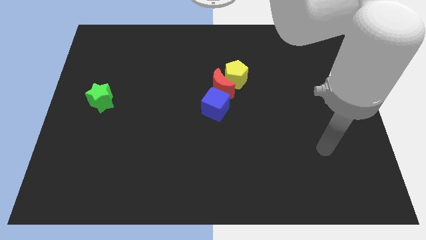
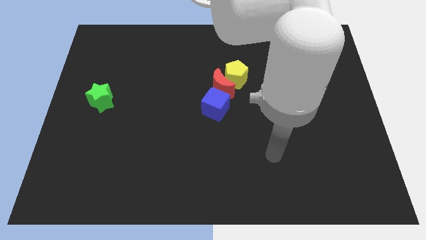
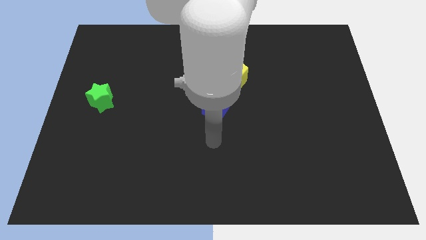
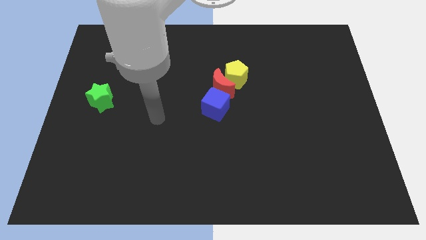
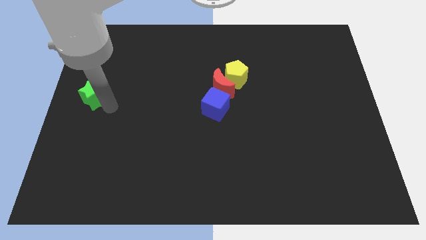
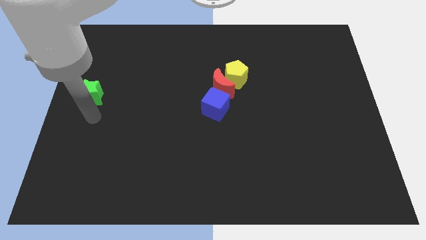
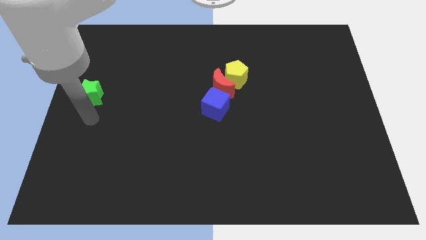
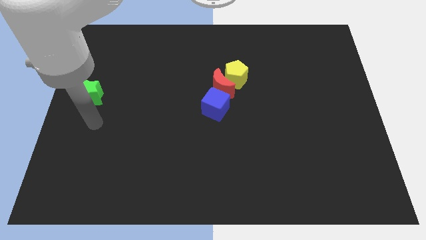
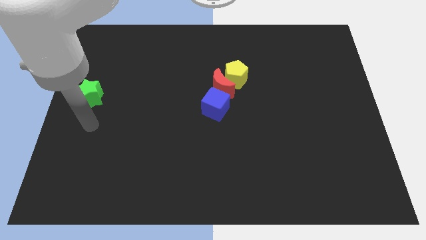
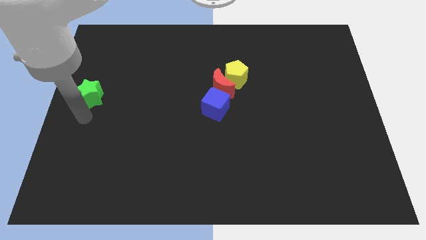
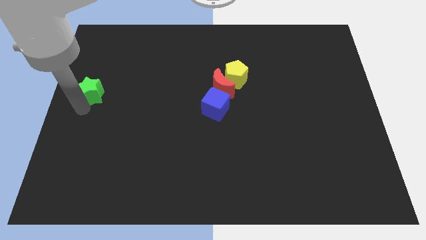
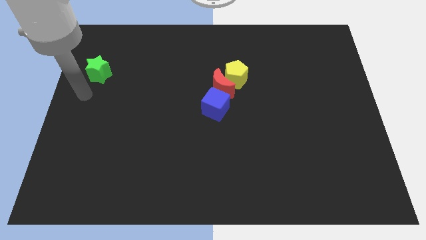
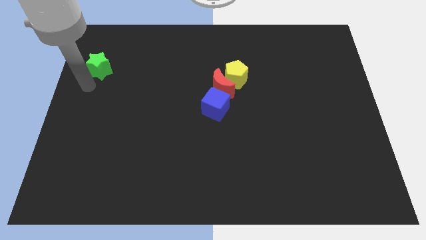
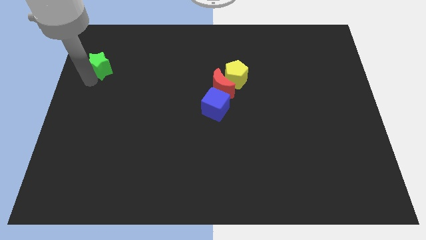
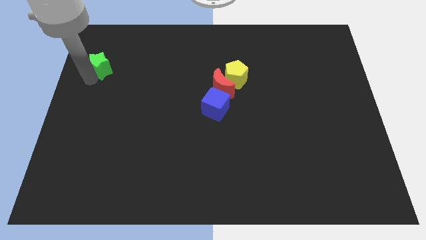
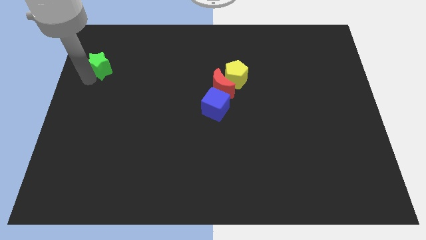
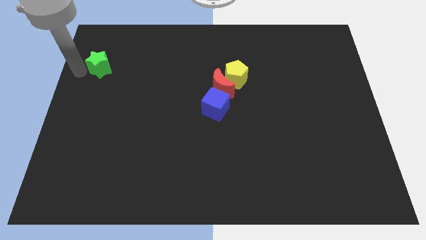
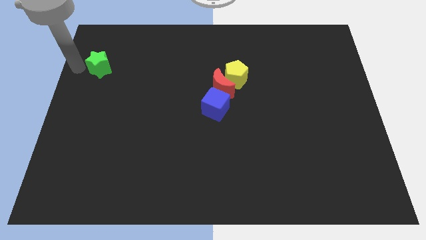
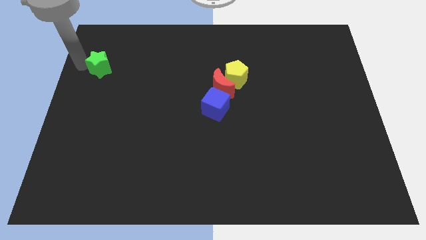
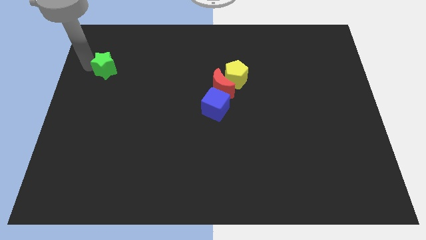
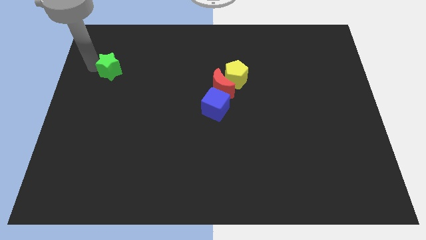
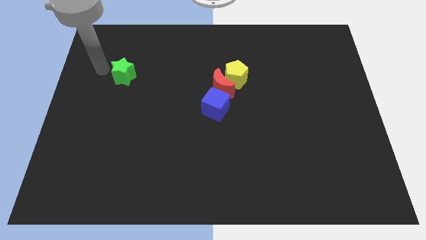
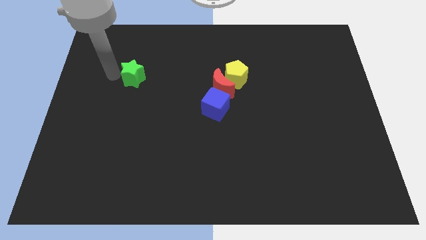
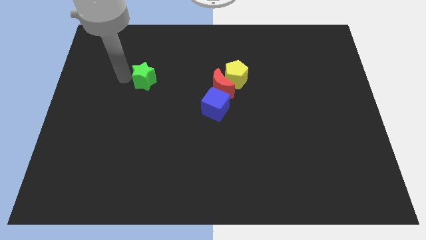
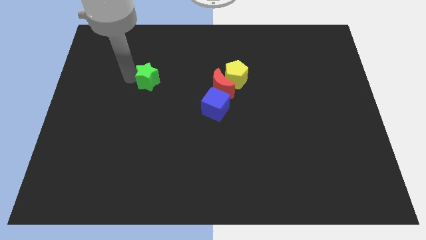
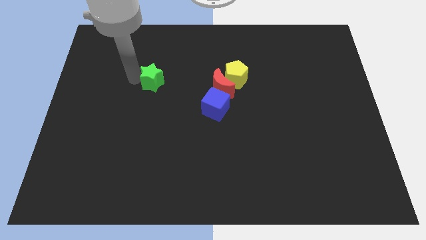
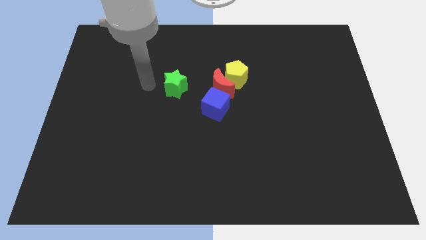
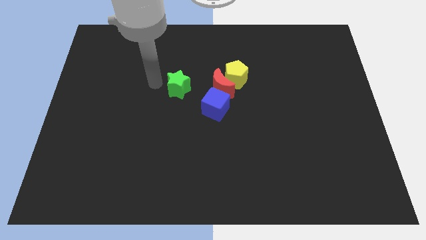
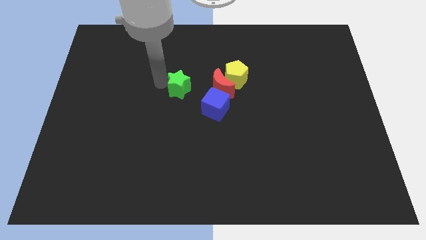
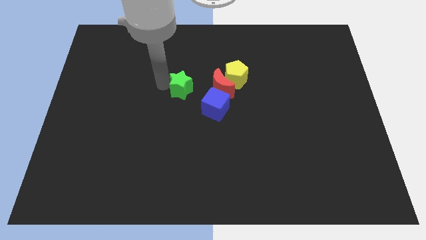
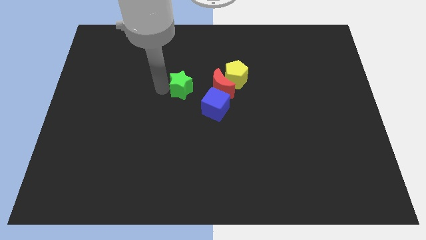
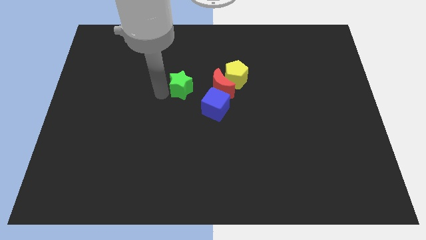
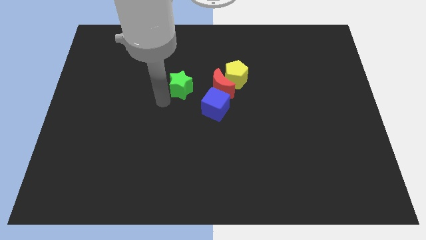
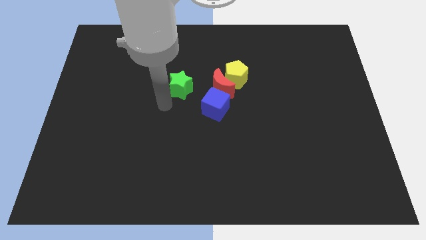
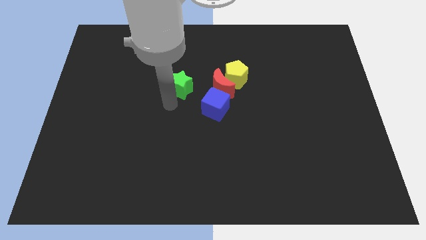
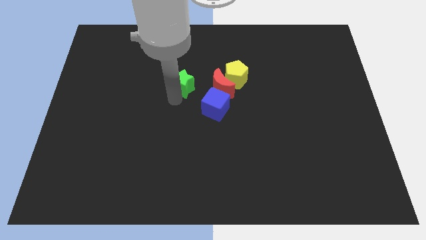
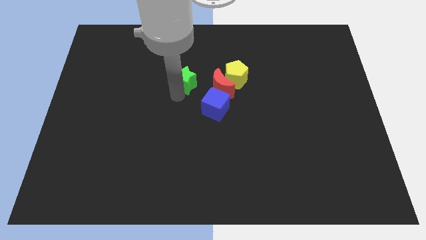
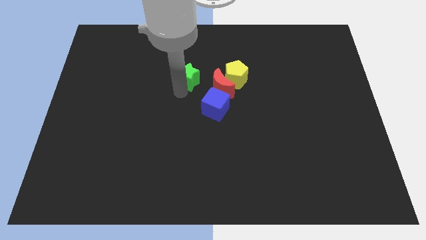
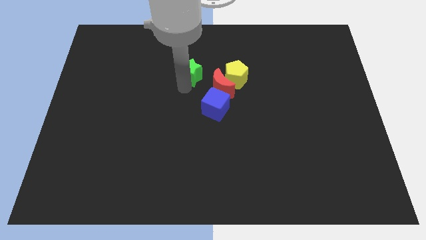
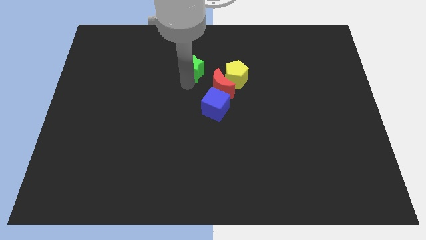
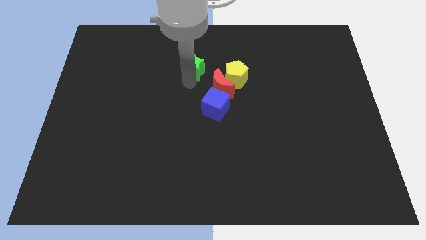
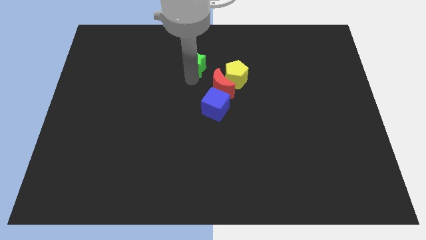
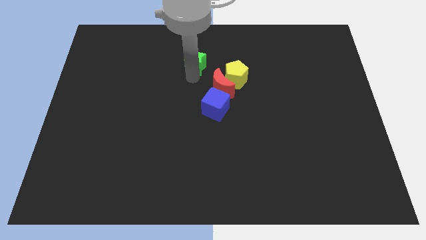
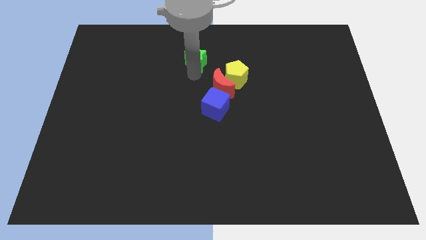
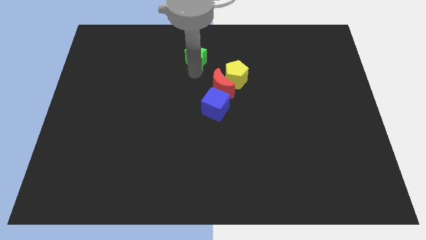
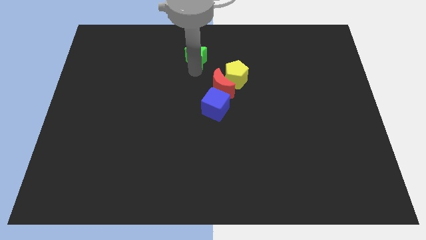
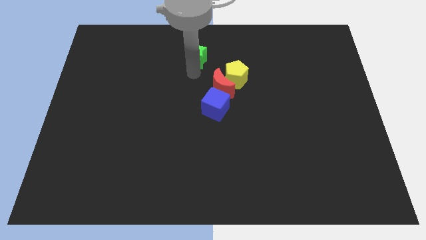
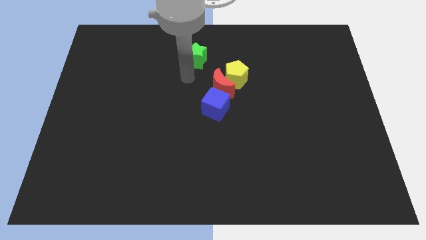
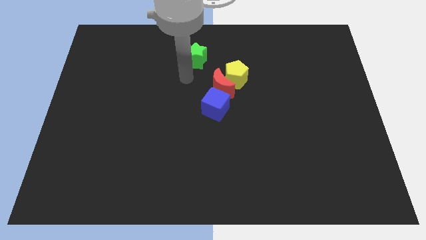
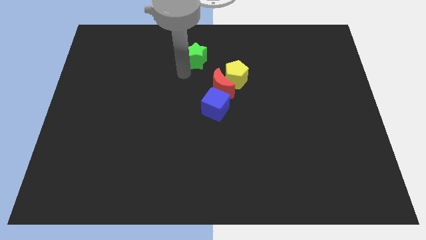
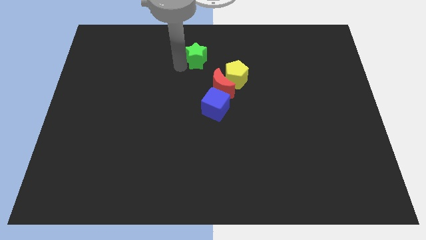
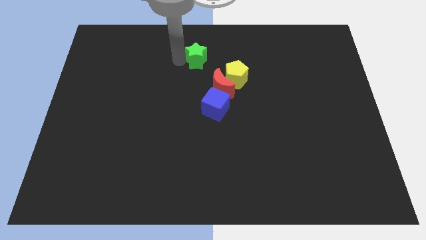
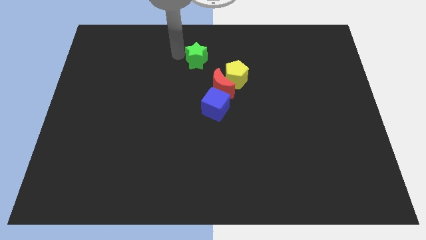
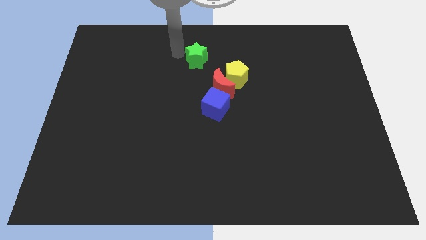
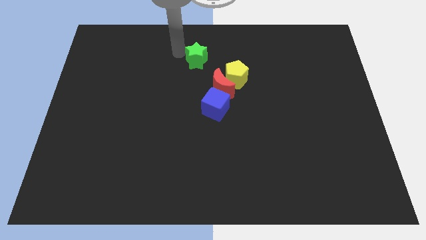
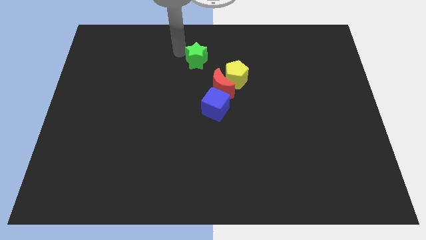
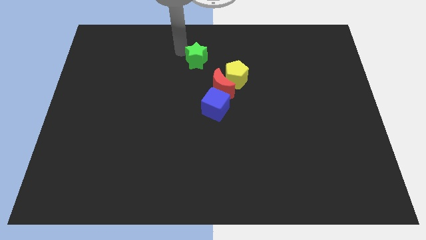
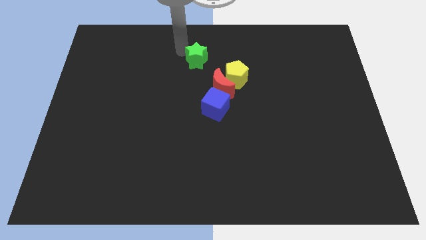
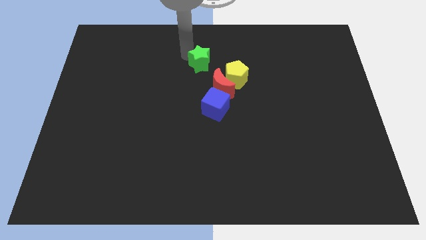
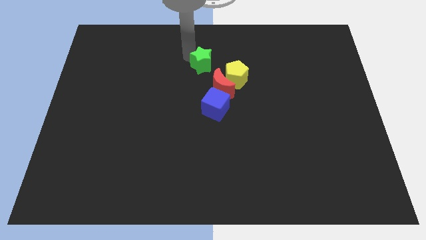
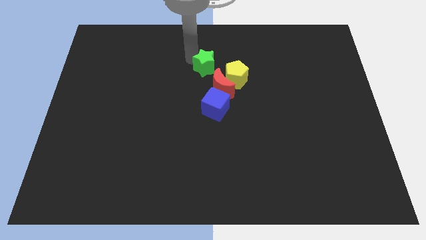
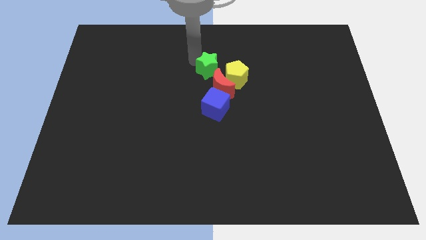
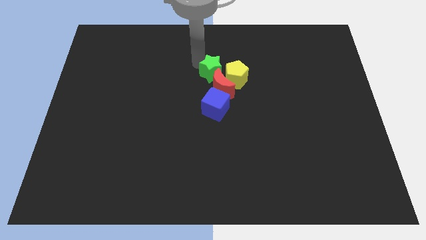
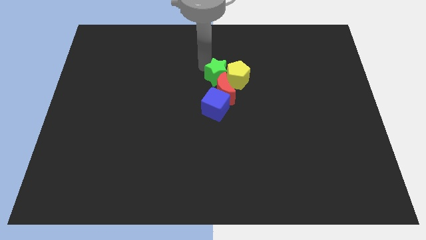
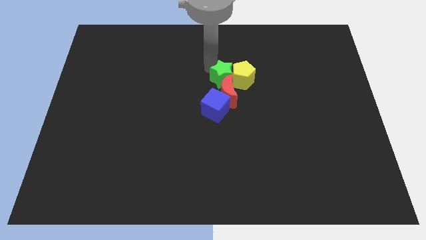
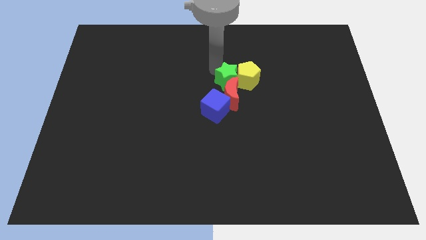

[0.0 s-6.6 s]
push the star next to the pentagon

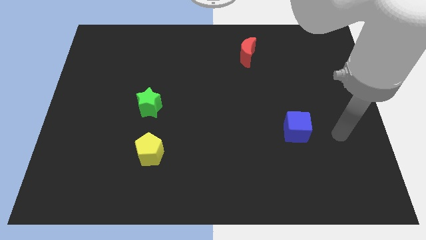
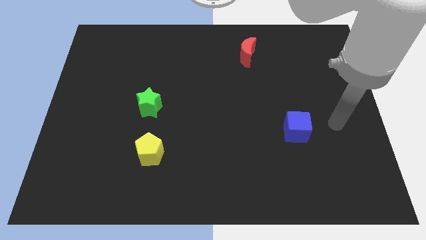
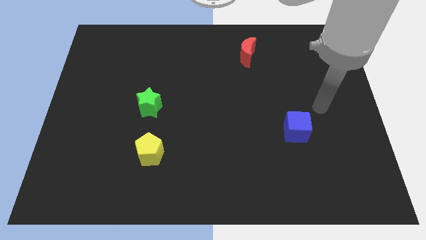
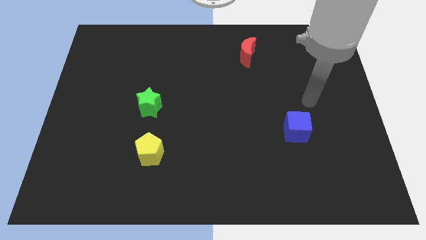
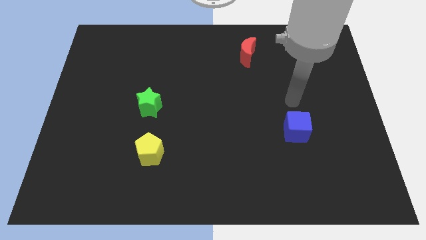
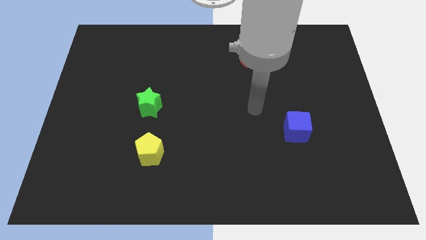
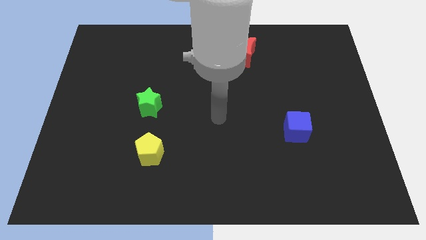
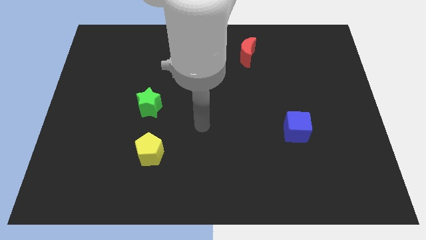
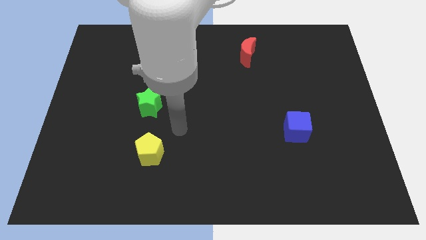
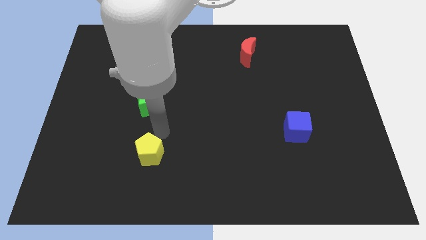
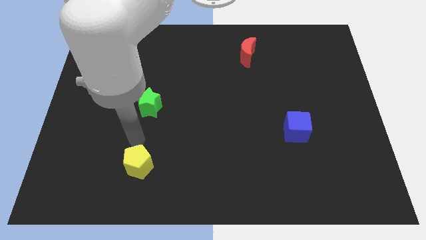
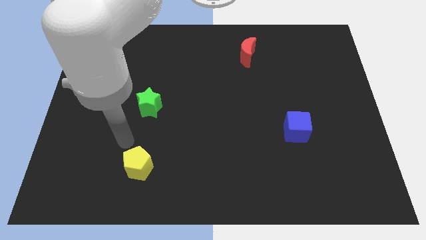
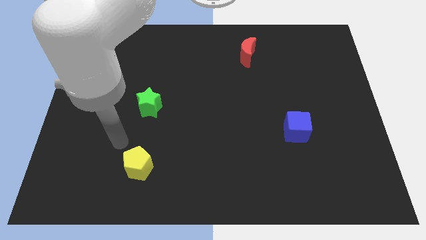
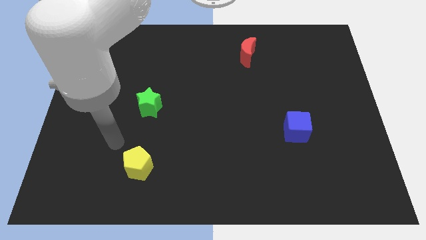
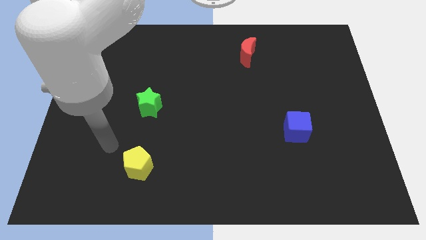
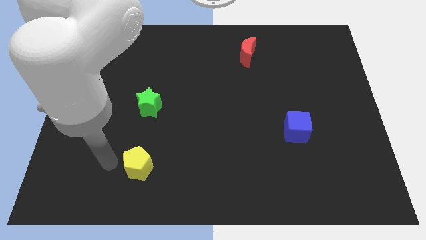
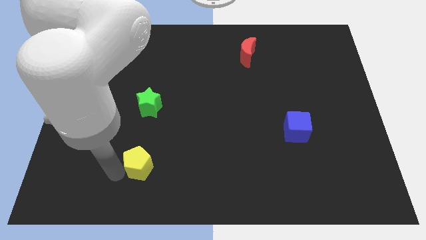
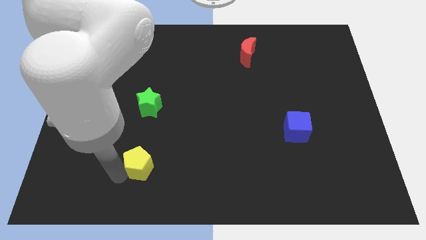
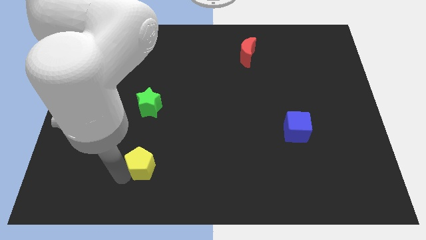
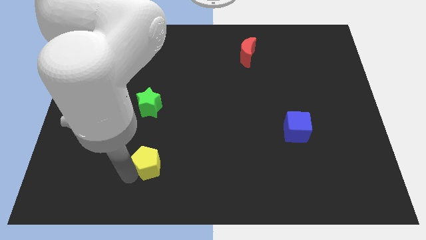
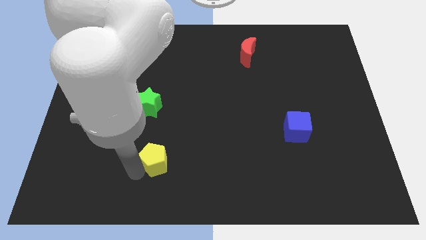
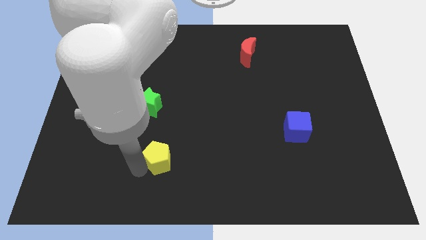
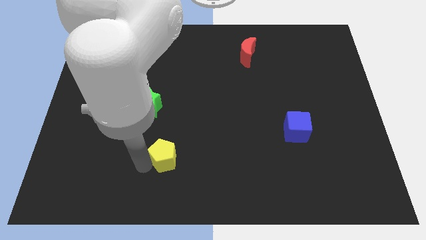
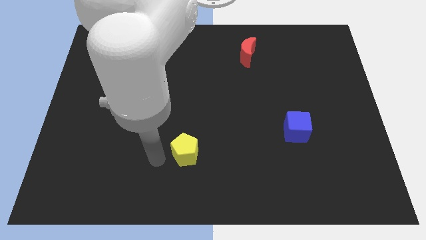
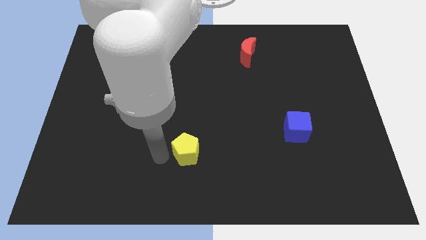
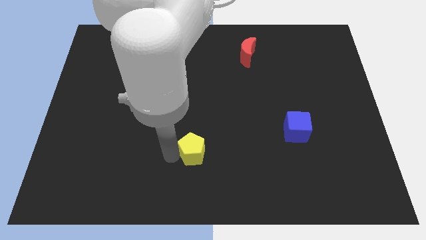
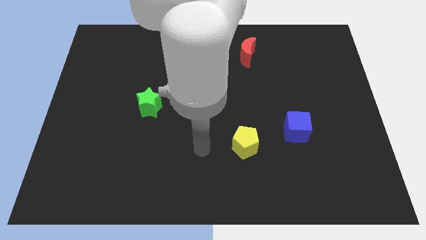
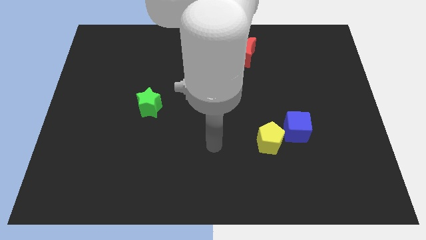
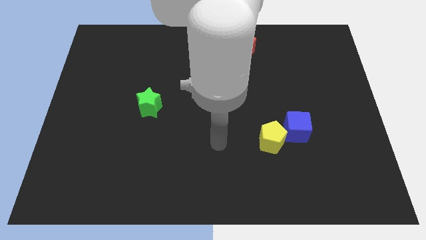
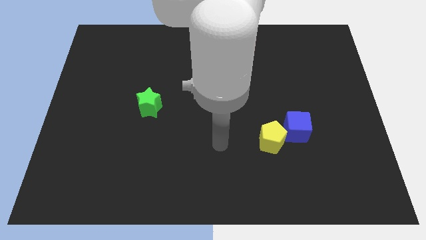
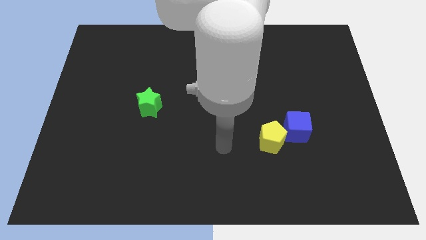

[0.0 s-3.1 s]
put the pentagon next to the blue cube
